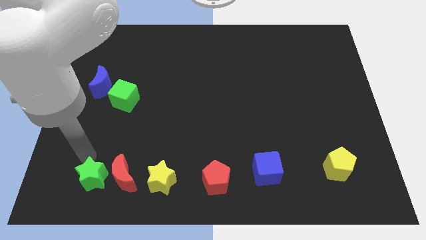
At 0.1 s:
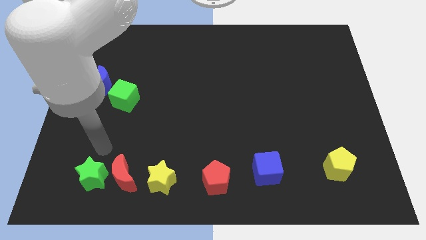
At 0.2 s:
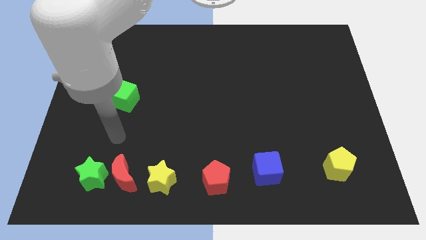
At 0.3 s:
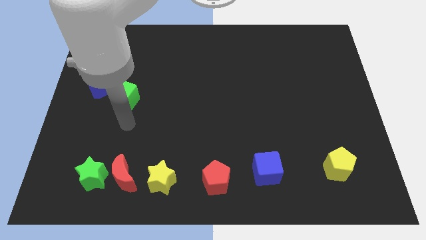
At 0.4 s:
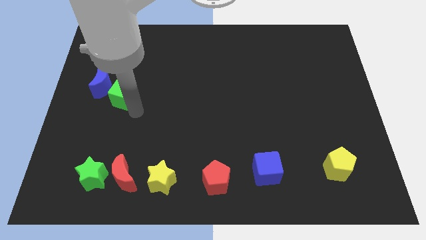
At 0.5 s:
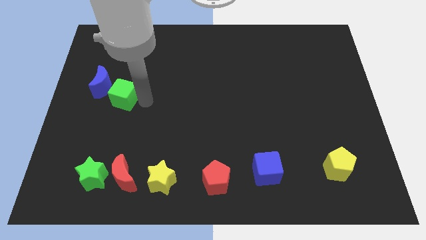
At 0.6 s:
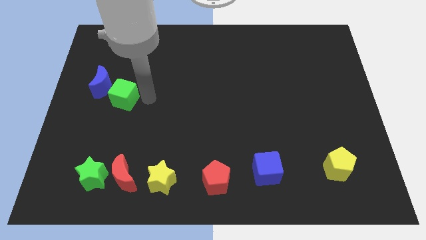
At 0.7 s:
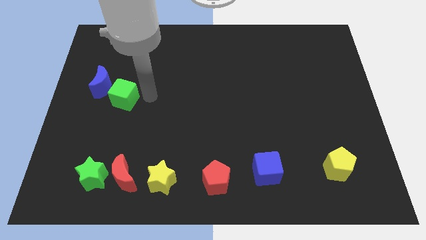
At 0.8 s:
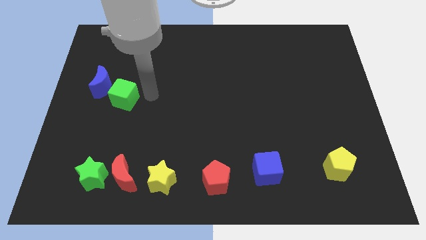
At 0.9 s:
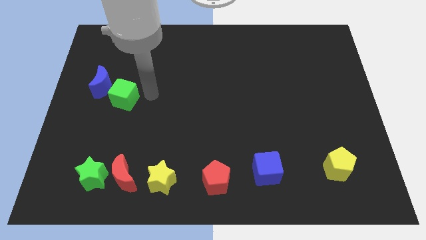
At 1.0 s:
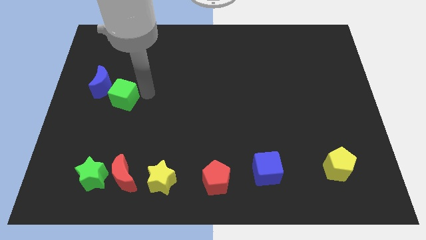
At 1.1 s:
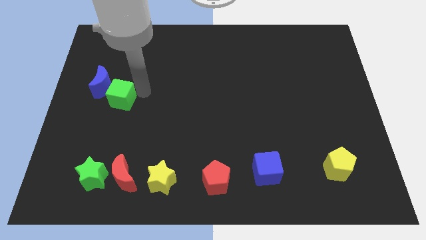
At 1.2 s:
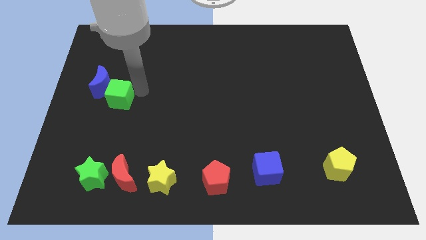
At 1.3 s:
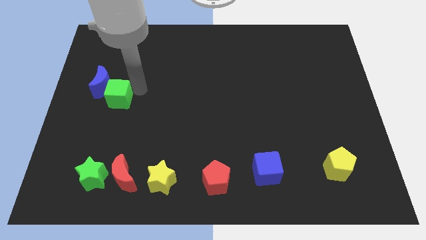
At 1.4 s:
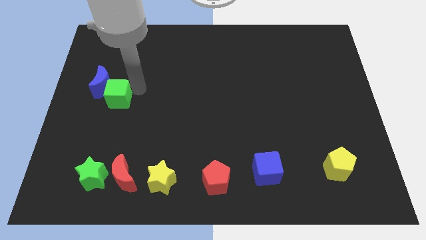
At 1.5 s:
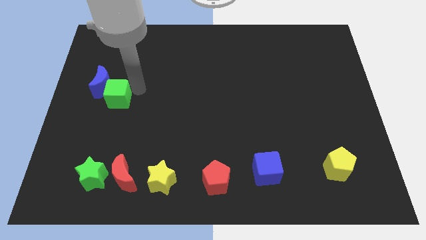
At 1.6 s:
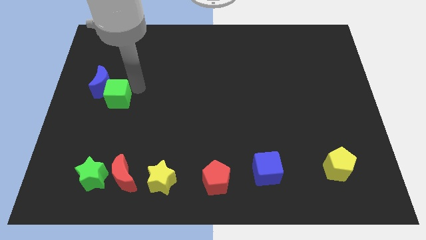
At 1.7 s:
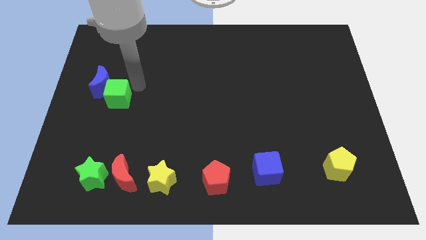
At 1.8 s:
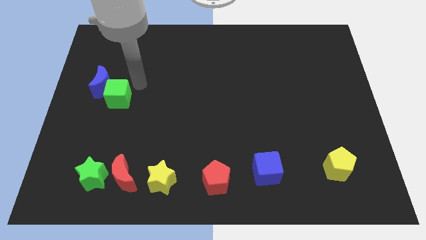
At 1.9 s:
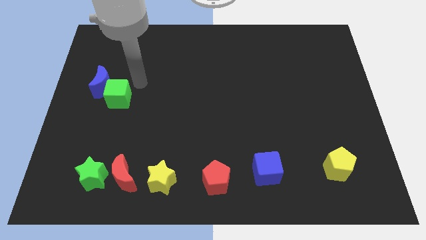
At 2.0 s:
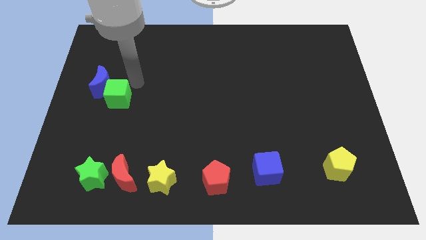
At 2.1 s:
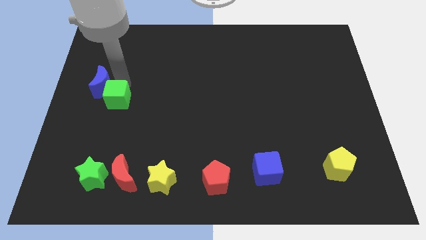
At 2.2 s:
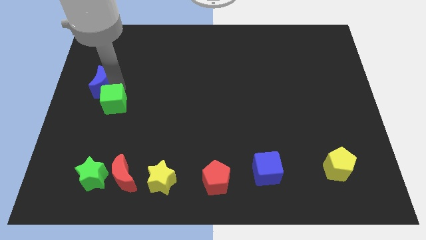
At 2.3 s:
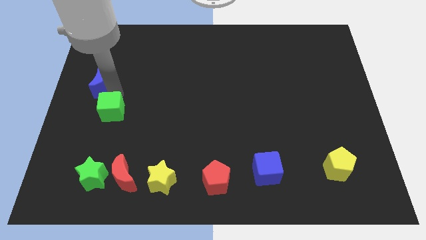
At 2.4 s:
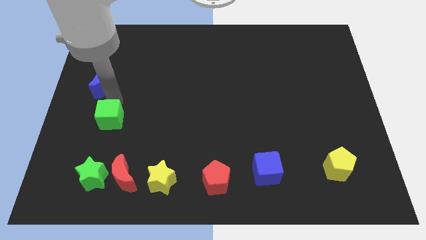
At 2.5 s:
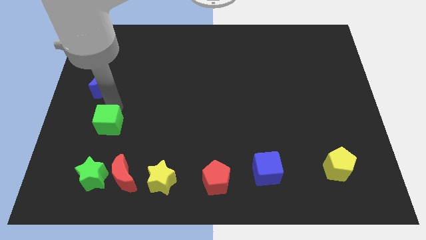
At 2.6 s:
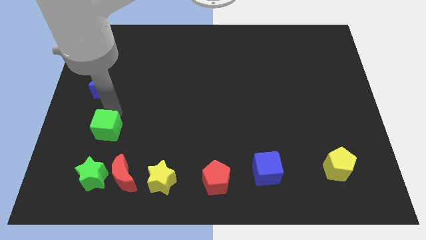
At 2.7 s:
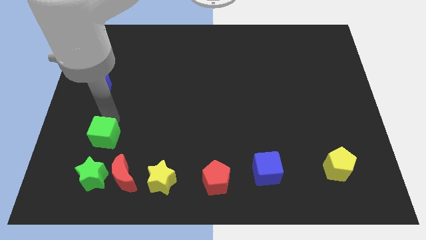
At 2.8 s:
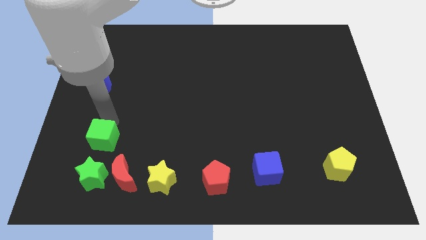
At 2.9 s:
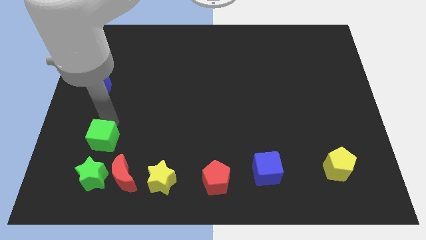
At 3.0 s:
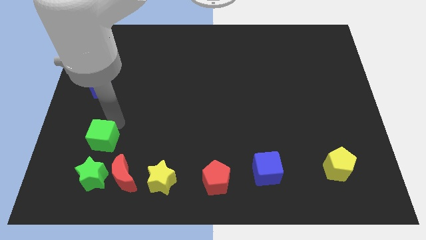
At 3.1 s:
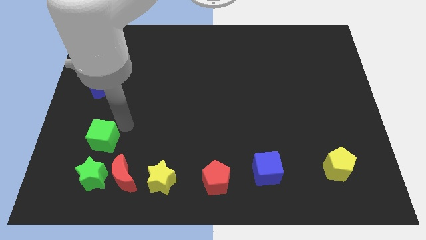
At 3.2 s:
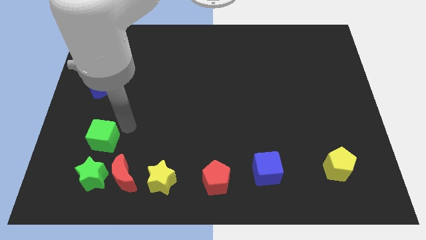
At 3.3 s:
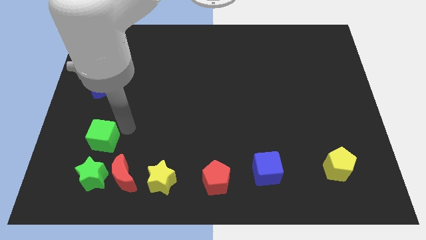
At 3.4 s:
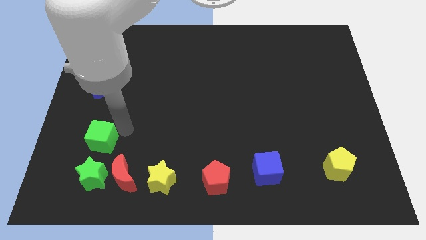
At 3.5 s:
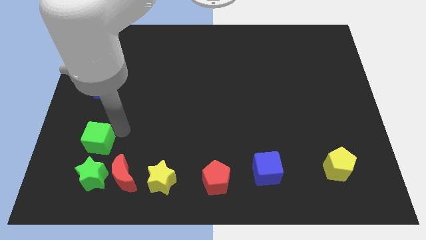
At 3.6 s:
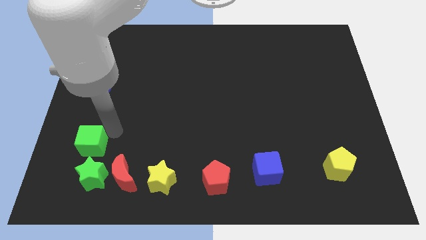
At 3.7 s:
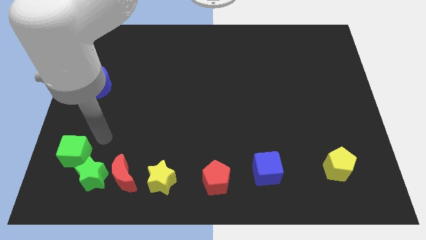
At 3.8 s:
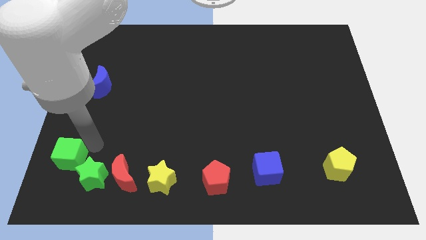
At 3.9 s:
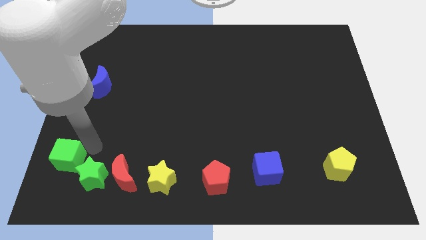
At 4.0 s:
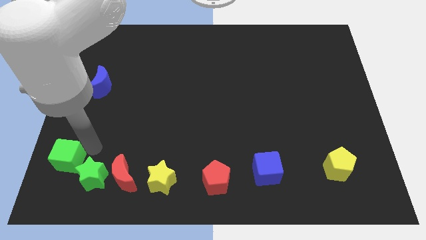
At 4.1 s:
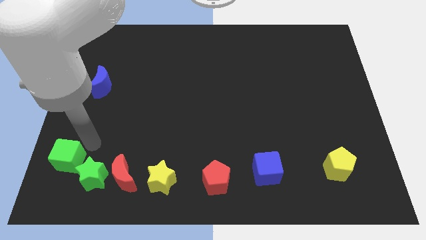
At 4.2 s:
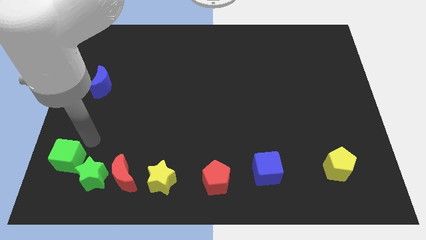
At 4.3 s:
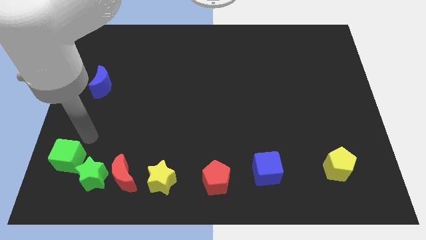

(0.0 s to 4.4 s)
push the green cube to the left of the green star

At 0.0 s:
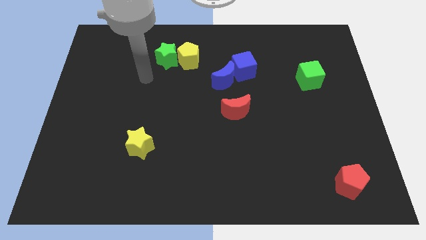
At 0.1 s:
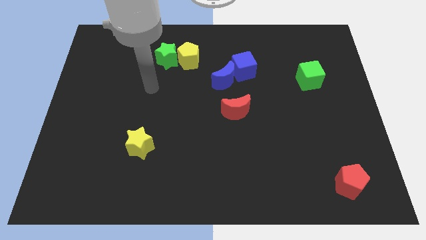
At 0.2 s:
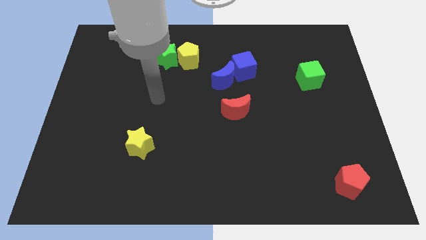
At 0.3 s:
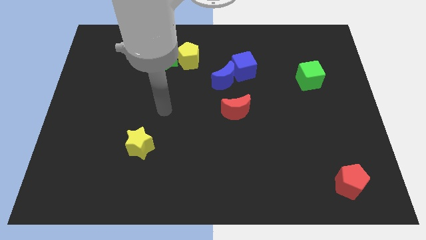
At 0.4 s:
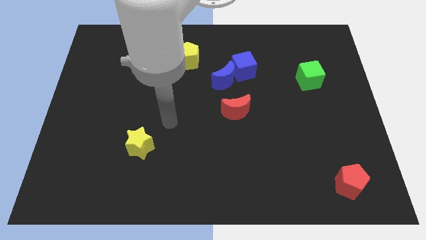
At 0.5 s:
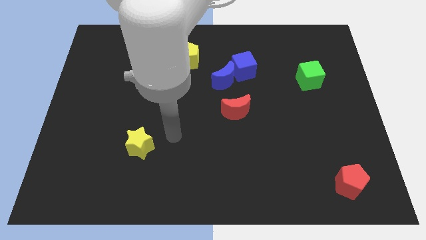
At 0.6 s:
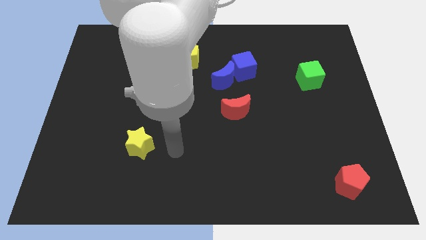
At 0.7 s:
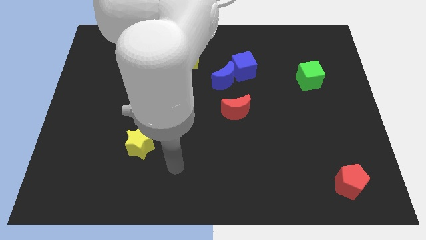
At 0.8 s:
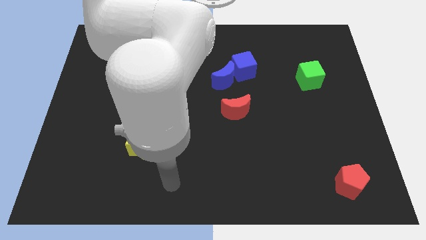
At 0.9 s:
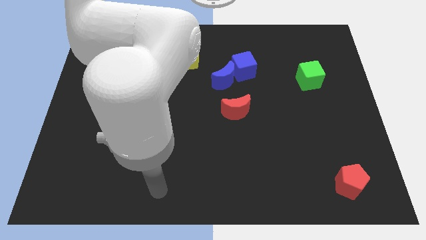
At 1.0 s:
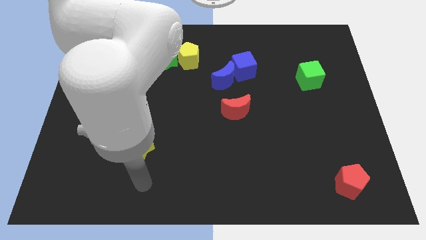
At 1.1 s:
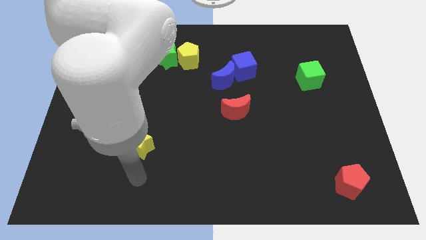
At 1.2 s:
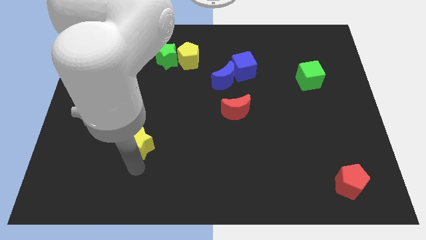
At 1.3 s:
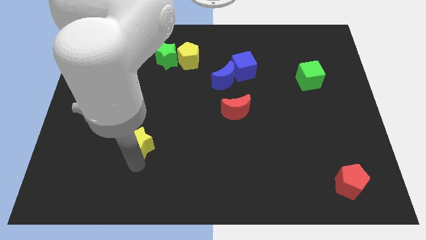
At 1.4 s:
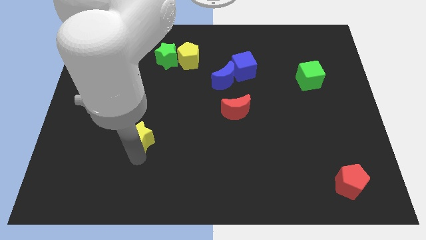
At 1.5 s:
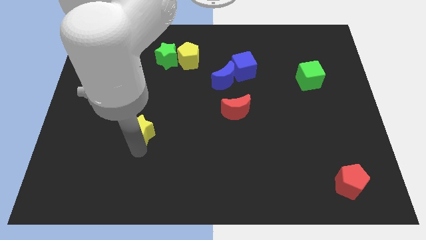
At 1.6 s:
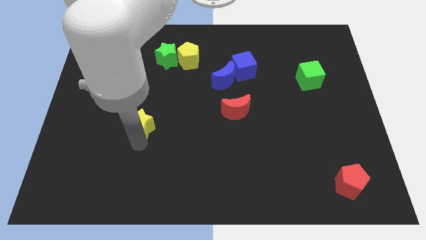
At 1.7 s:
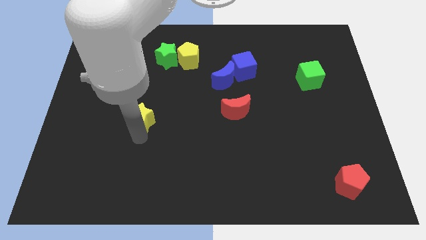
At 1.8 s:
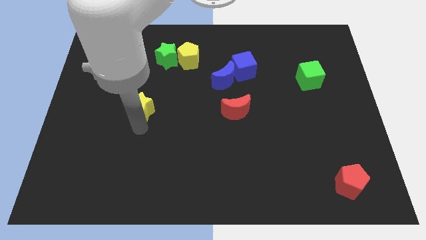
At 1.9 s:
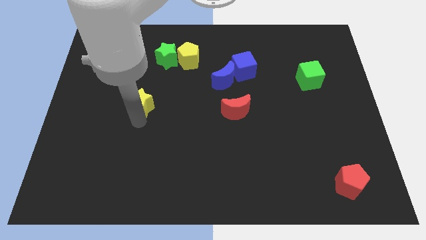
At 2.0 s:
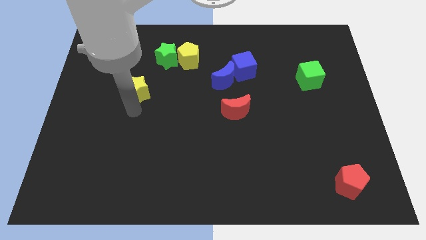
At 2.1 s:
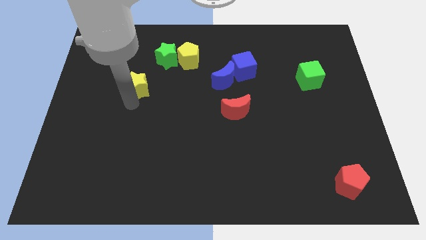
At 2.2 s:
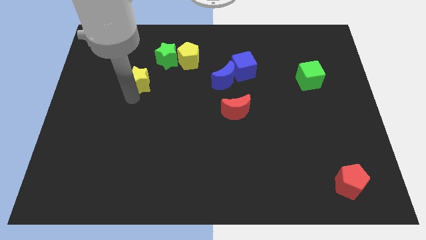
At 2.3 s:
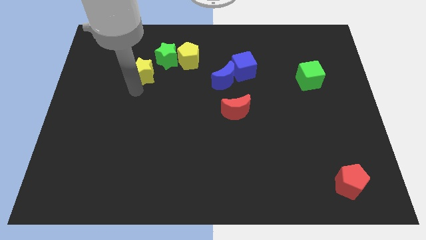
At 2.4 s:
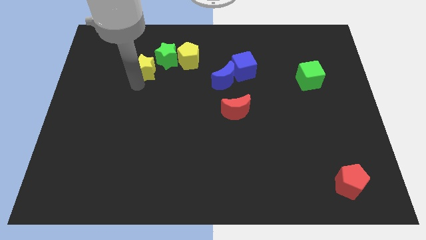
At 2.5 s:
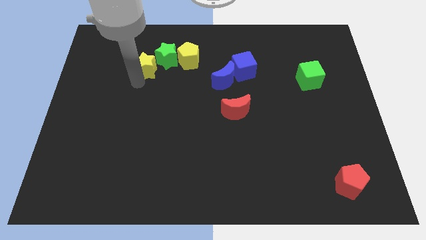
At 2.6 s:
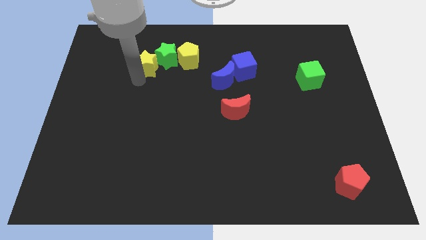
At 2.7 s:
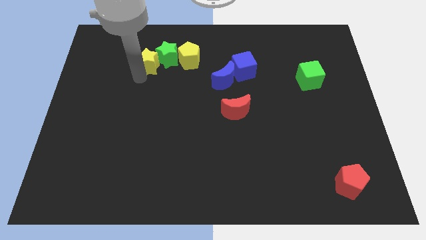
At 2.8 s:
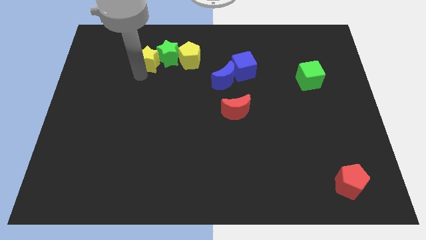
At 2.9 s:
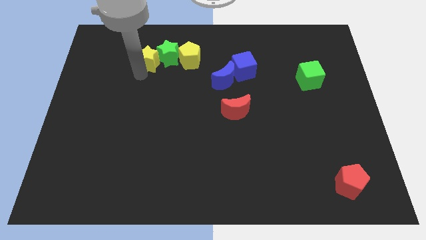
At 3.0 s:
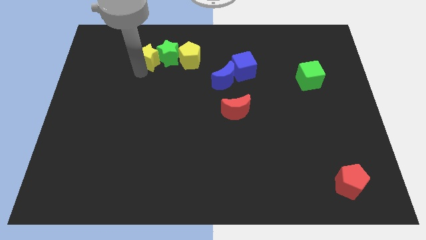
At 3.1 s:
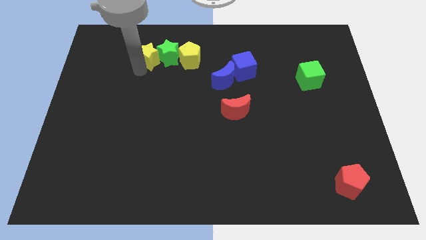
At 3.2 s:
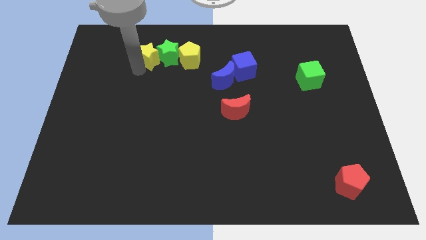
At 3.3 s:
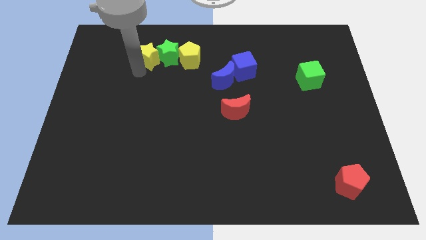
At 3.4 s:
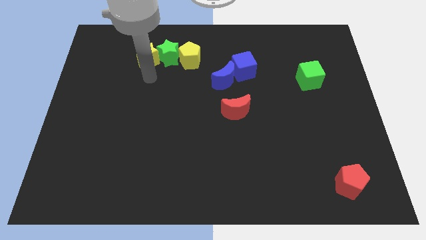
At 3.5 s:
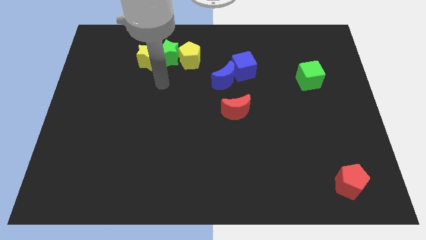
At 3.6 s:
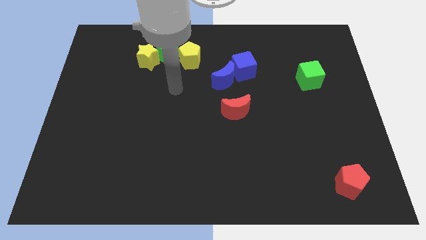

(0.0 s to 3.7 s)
push the yellow star into the green star

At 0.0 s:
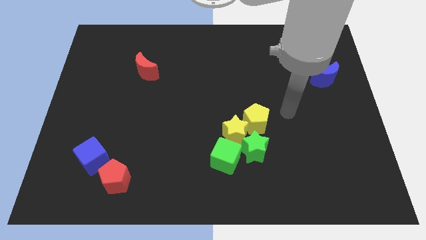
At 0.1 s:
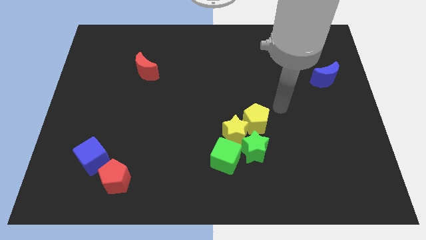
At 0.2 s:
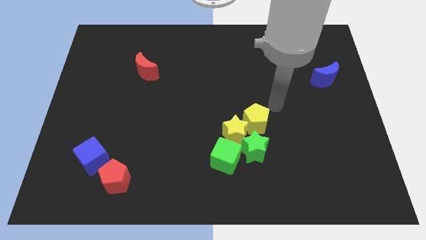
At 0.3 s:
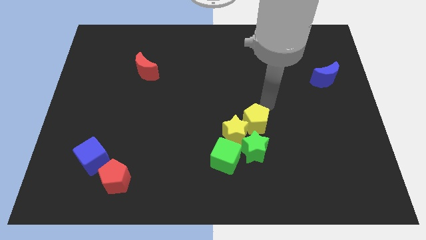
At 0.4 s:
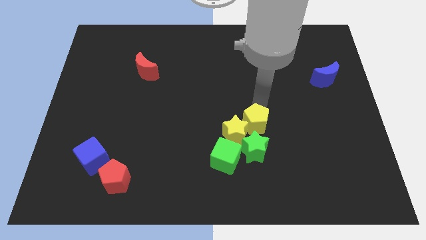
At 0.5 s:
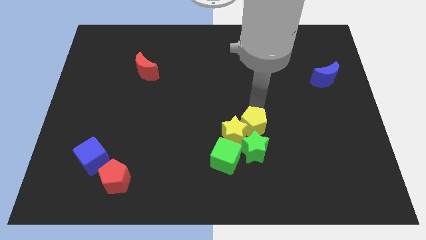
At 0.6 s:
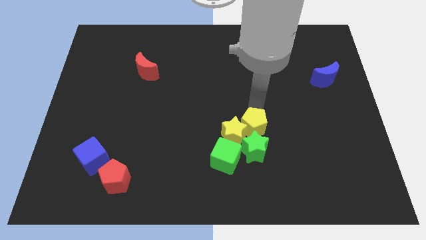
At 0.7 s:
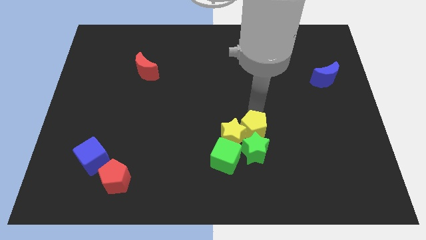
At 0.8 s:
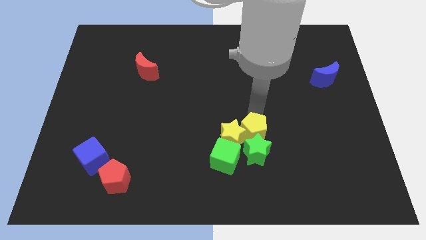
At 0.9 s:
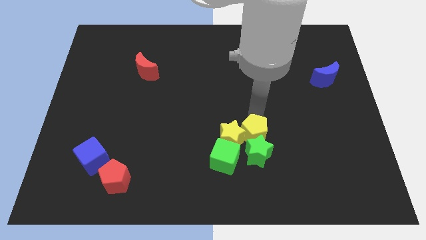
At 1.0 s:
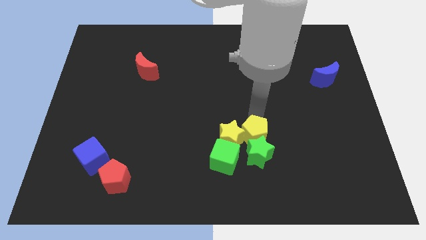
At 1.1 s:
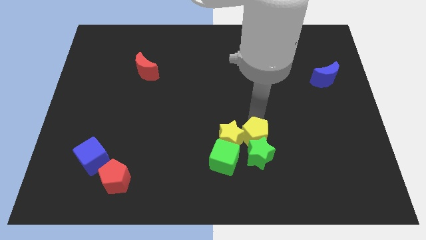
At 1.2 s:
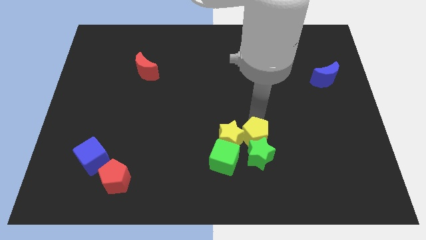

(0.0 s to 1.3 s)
move the yellow pentagon above the green star
